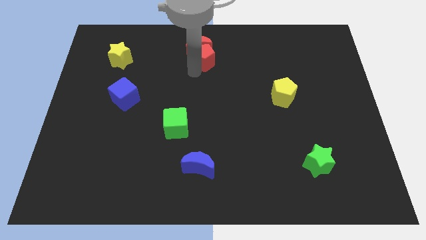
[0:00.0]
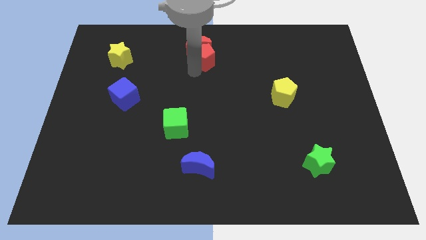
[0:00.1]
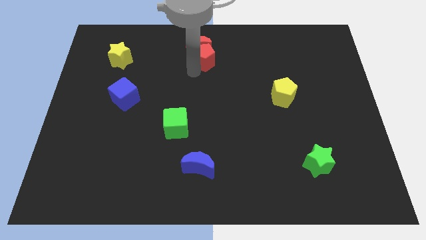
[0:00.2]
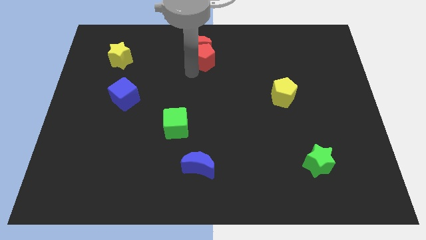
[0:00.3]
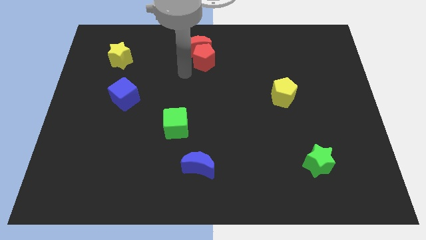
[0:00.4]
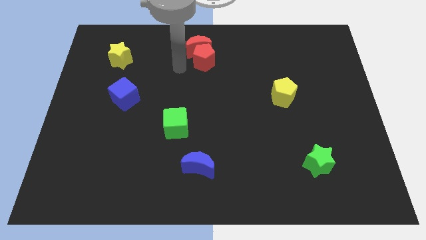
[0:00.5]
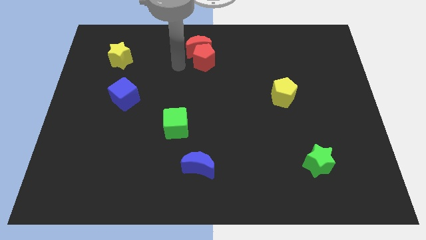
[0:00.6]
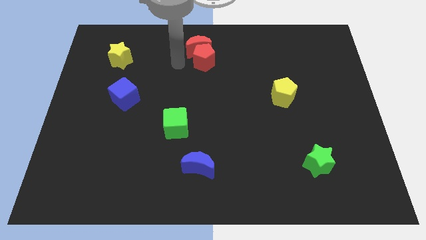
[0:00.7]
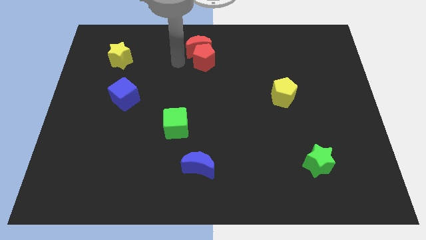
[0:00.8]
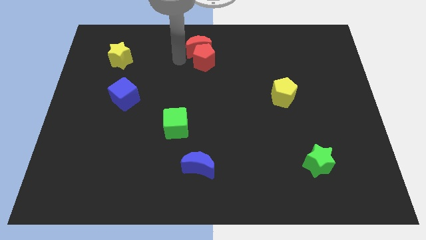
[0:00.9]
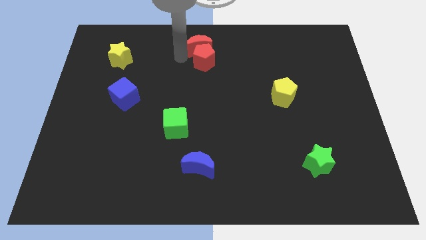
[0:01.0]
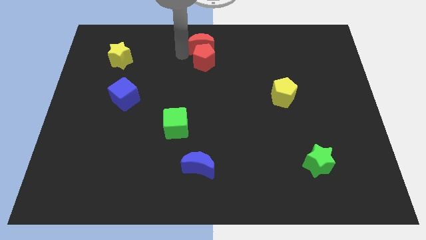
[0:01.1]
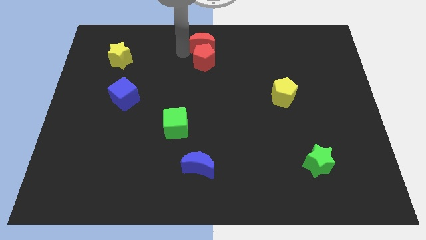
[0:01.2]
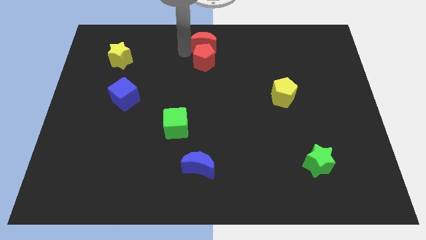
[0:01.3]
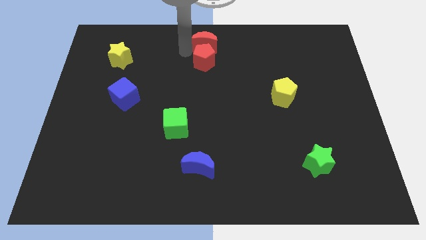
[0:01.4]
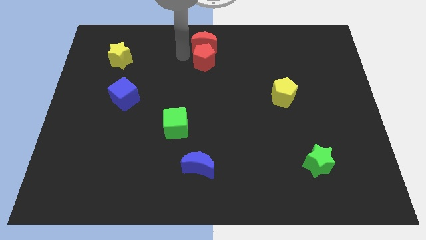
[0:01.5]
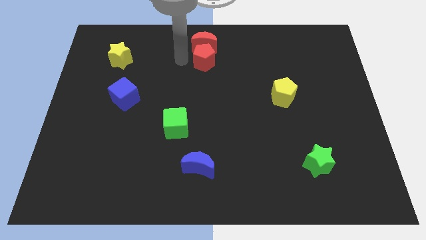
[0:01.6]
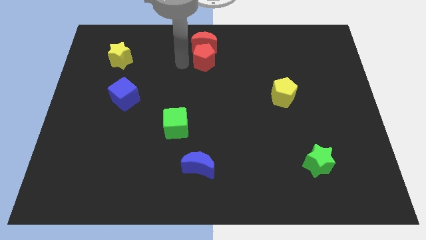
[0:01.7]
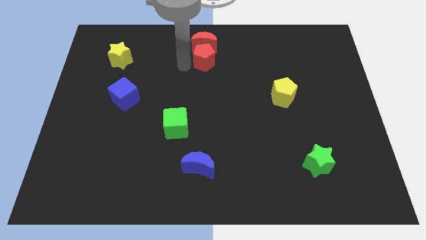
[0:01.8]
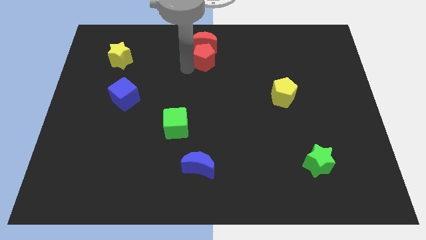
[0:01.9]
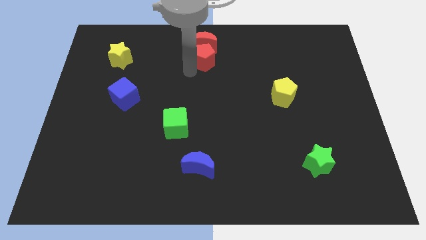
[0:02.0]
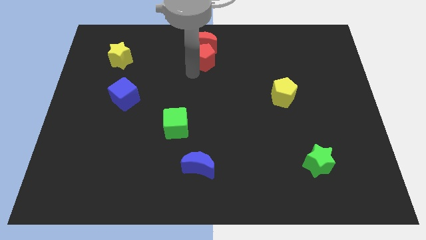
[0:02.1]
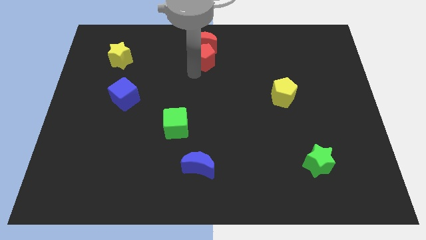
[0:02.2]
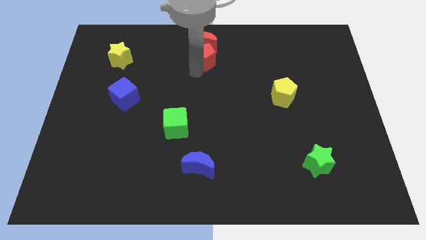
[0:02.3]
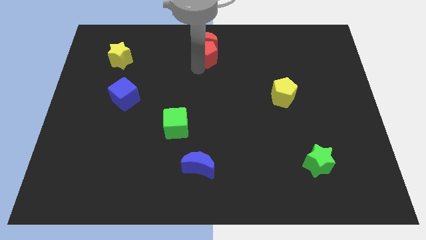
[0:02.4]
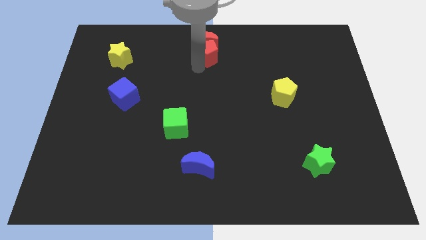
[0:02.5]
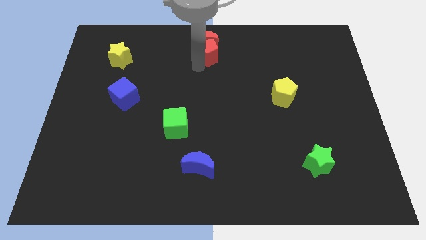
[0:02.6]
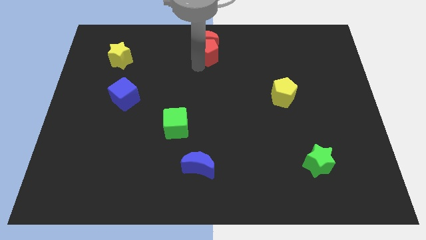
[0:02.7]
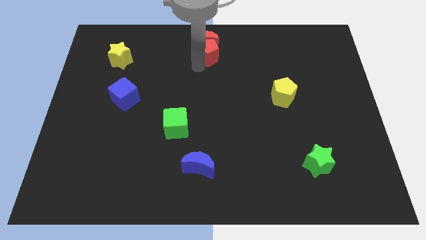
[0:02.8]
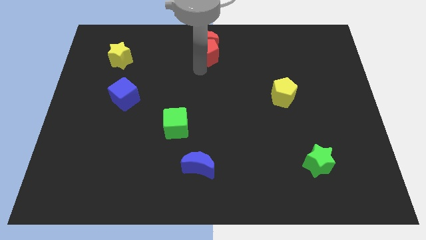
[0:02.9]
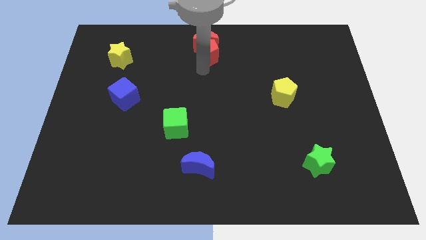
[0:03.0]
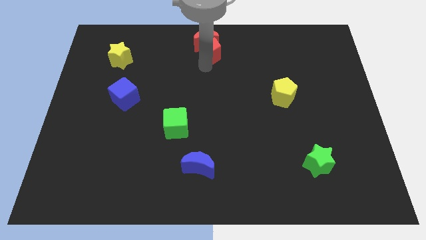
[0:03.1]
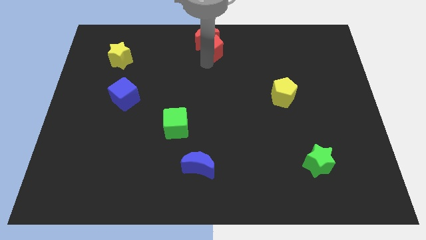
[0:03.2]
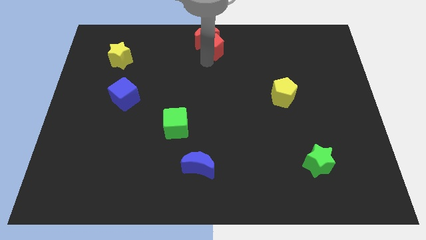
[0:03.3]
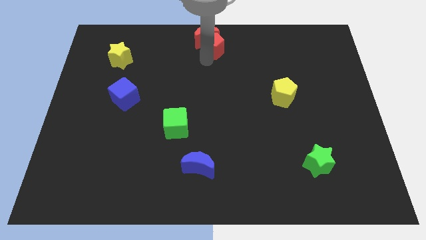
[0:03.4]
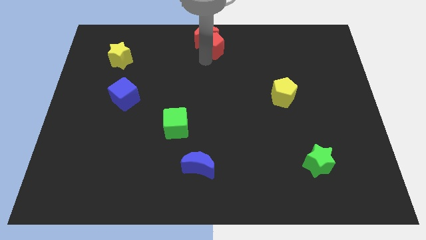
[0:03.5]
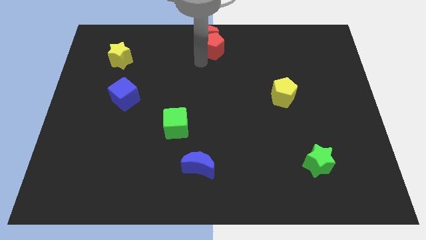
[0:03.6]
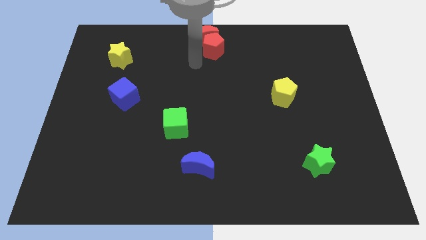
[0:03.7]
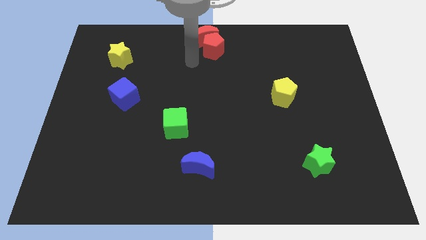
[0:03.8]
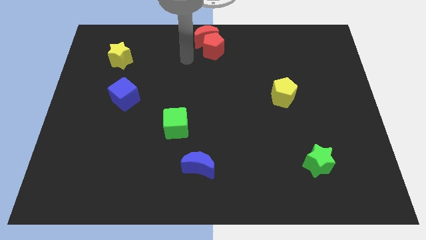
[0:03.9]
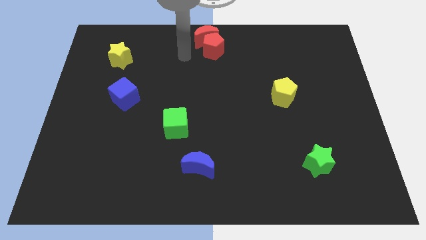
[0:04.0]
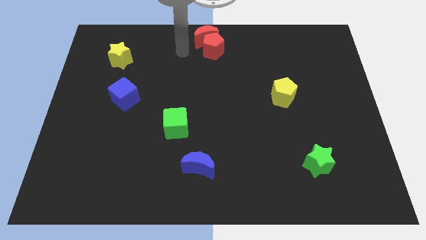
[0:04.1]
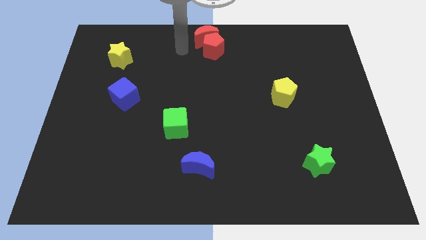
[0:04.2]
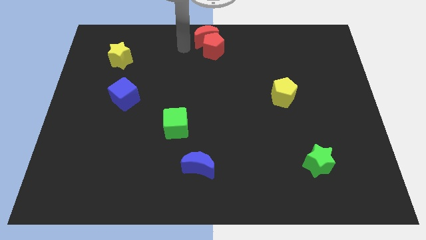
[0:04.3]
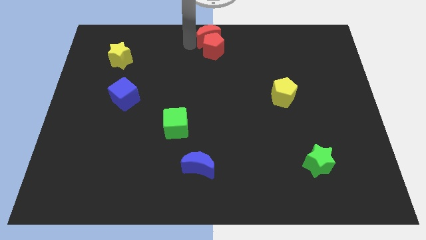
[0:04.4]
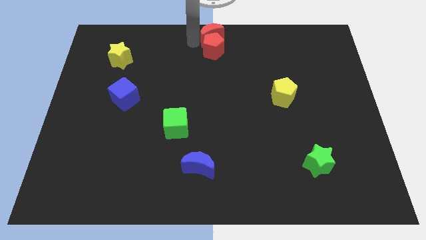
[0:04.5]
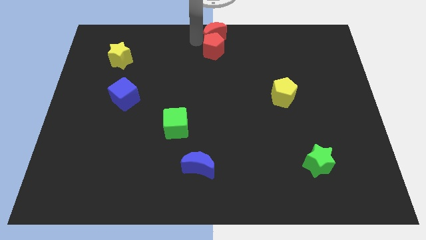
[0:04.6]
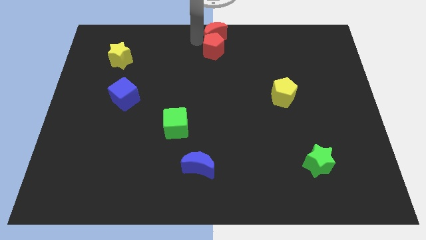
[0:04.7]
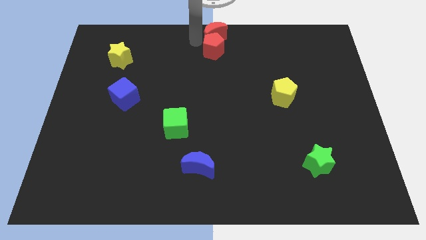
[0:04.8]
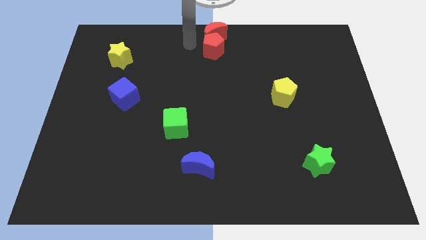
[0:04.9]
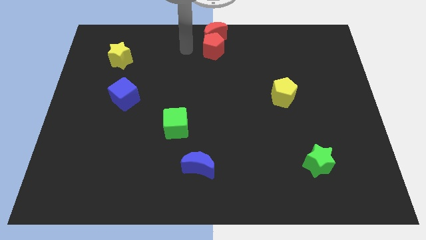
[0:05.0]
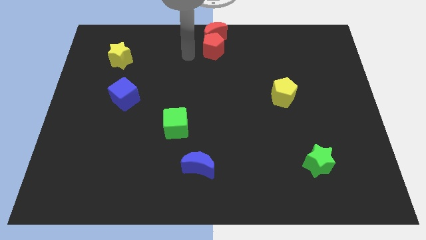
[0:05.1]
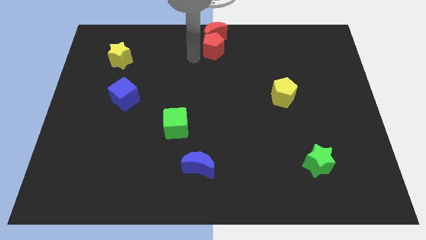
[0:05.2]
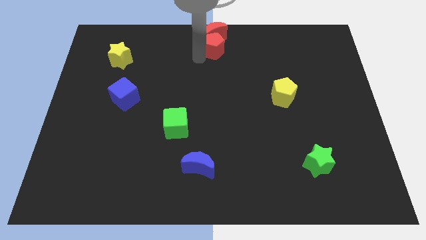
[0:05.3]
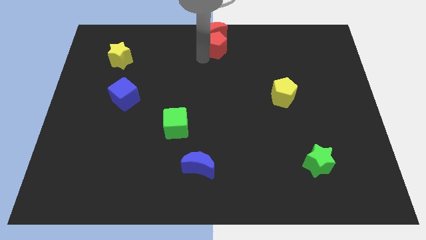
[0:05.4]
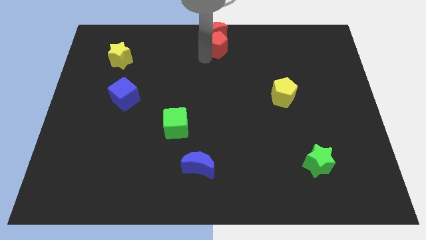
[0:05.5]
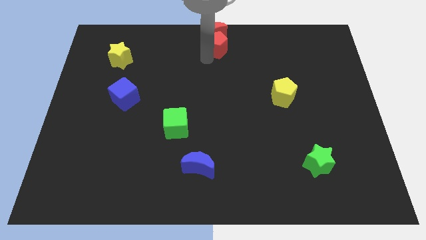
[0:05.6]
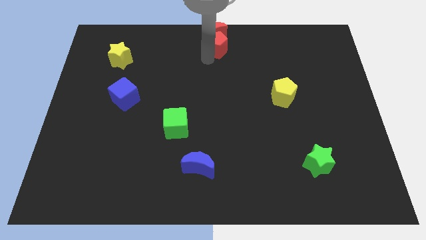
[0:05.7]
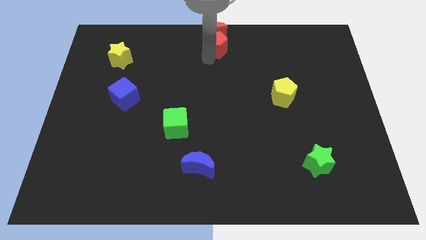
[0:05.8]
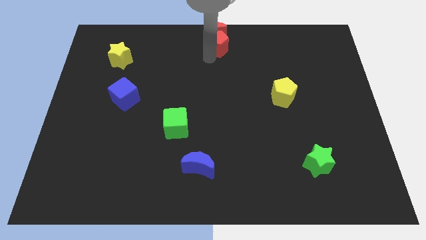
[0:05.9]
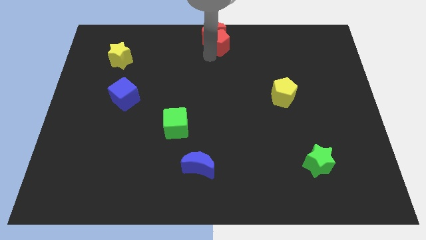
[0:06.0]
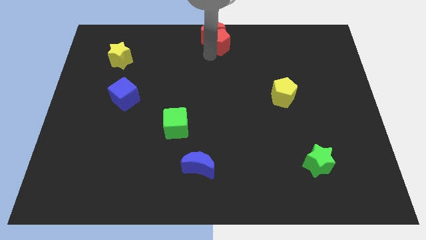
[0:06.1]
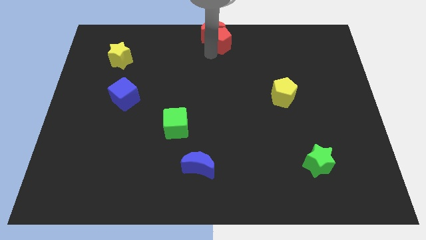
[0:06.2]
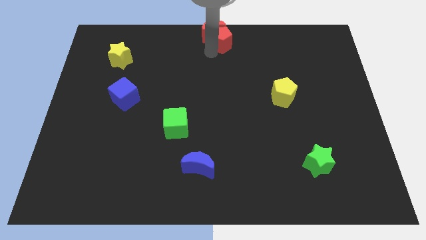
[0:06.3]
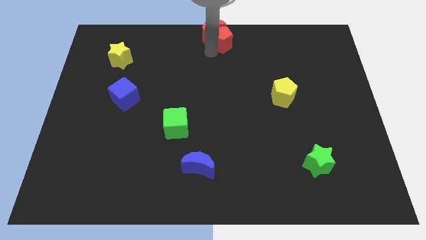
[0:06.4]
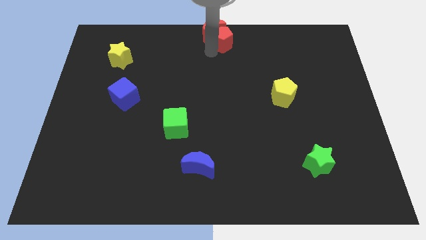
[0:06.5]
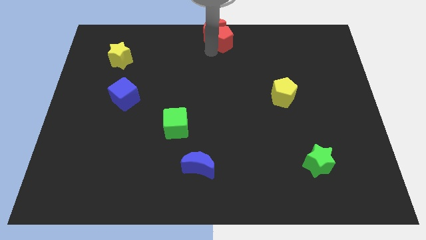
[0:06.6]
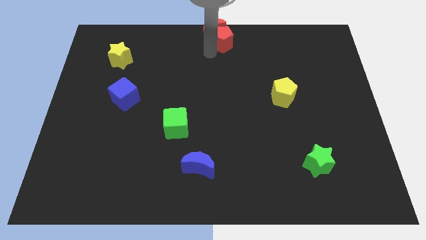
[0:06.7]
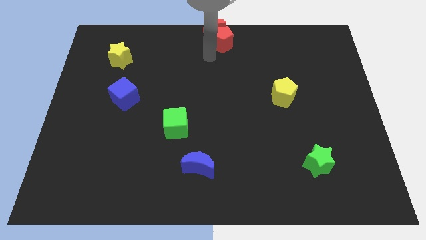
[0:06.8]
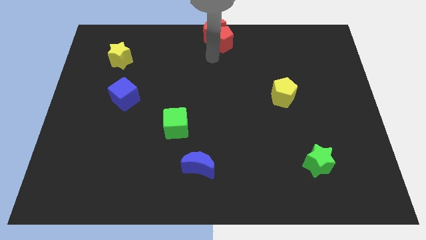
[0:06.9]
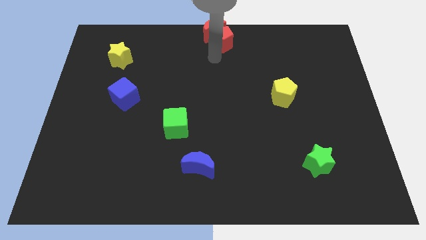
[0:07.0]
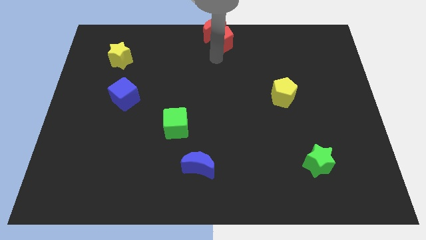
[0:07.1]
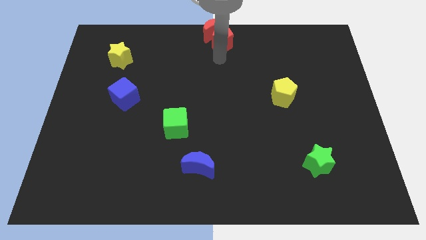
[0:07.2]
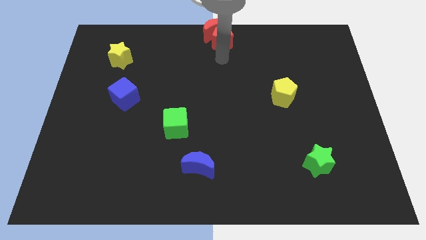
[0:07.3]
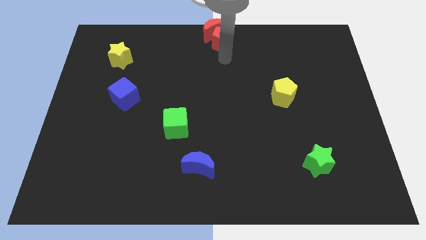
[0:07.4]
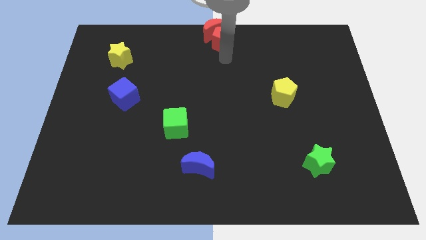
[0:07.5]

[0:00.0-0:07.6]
place the red pentagon and red moon at the top center of the board

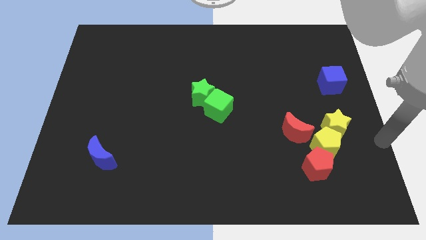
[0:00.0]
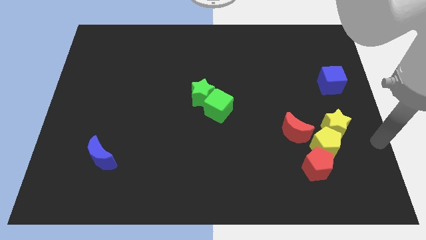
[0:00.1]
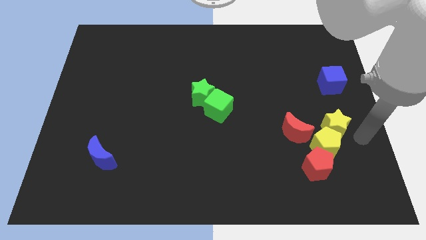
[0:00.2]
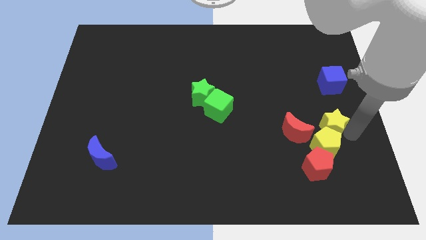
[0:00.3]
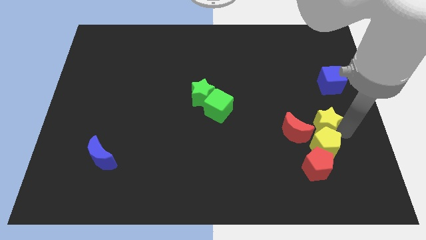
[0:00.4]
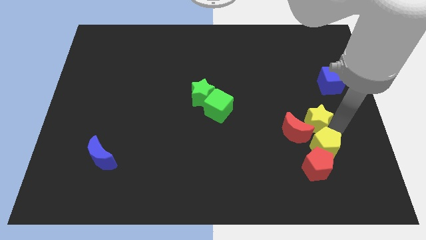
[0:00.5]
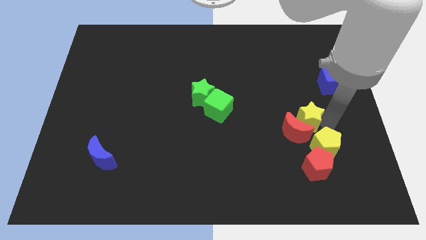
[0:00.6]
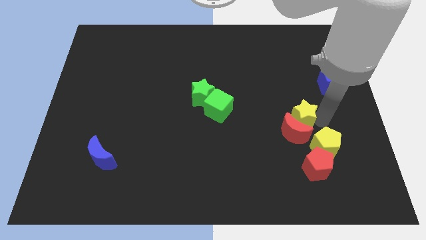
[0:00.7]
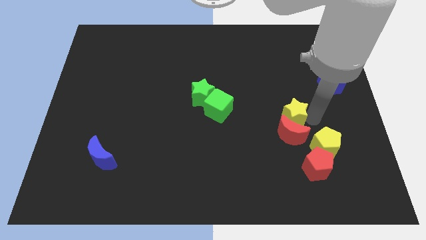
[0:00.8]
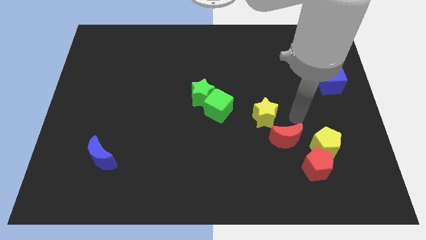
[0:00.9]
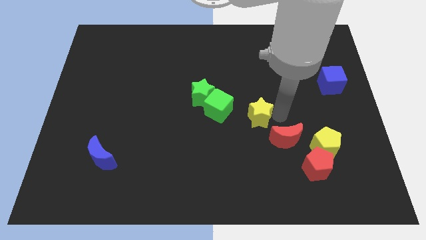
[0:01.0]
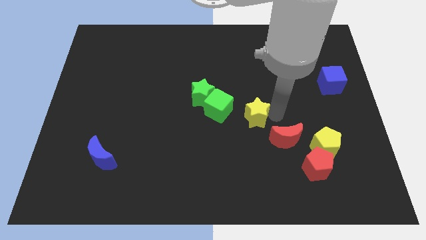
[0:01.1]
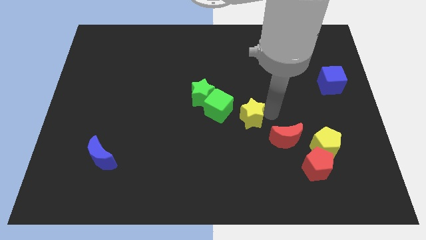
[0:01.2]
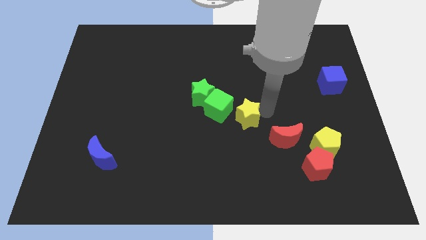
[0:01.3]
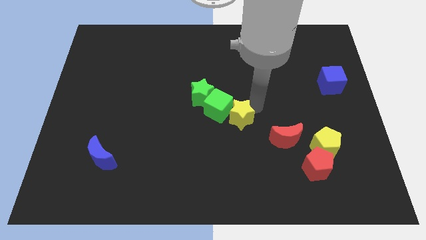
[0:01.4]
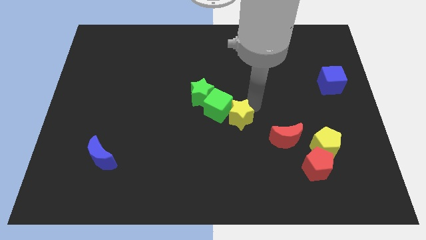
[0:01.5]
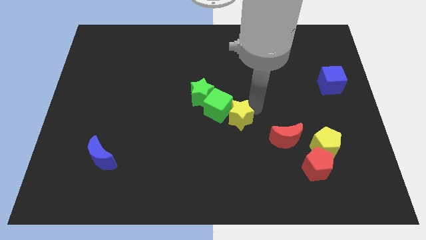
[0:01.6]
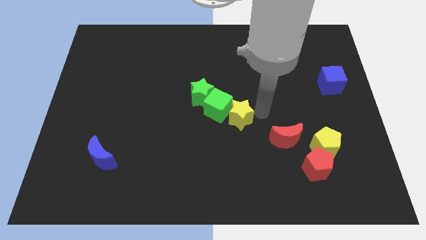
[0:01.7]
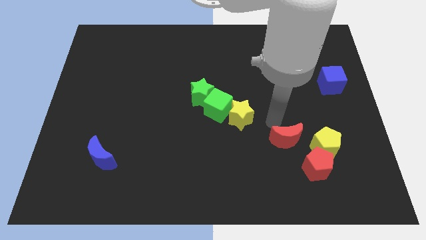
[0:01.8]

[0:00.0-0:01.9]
push the yellow star close to the green cube at the center of the board
